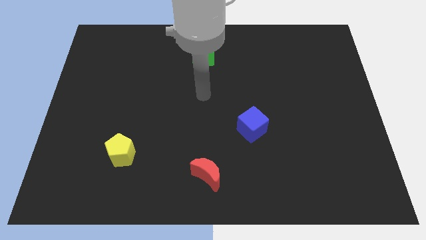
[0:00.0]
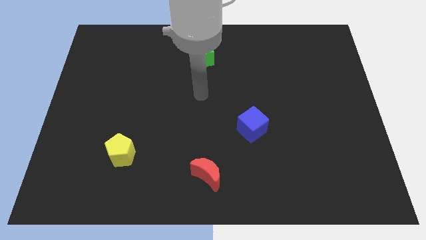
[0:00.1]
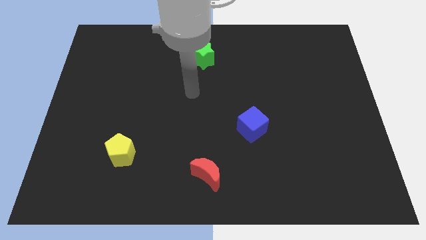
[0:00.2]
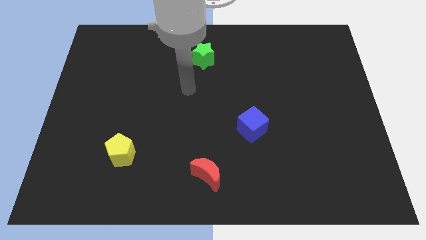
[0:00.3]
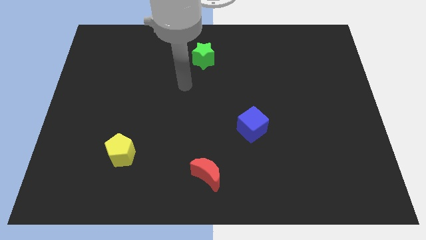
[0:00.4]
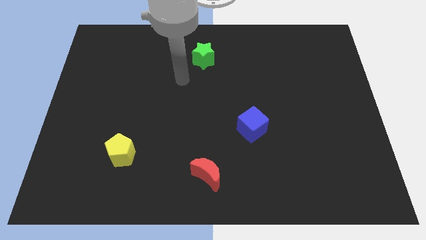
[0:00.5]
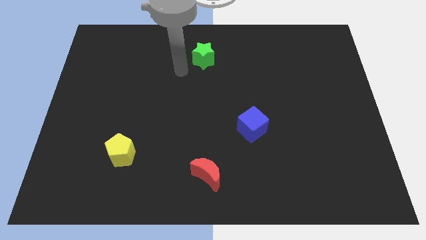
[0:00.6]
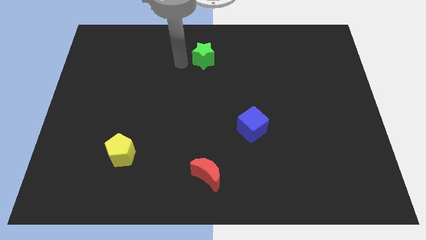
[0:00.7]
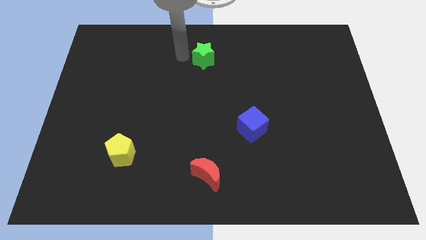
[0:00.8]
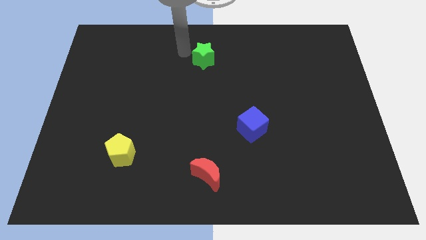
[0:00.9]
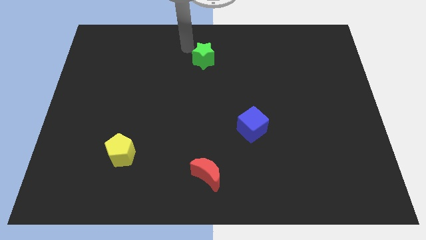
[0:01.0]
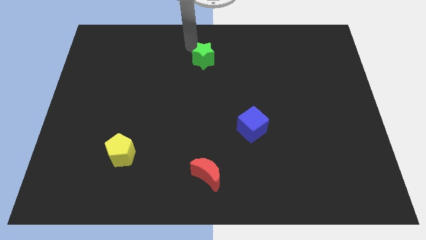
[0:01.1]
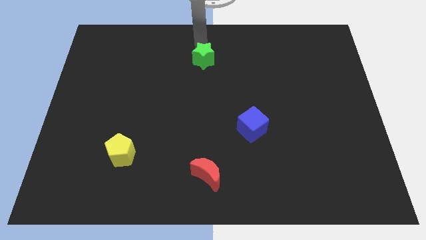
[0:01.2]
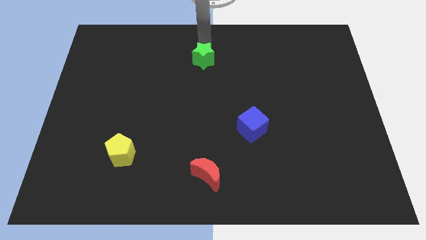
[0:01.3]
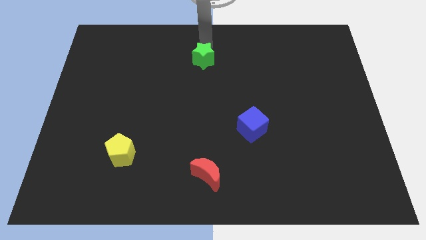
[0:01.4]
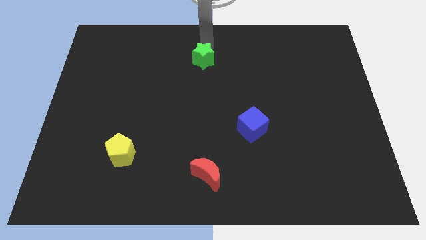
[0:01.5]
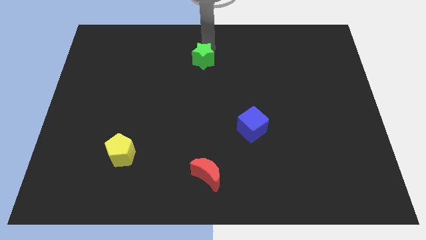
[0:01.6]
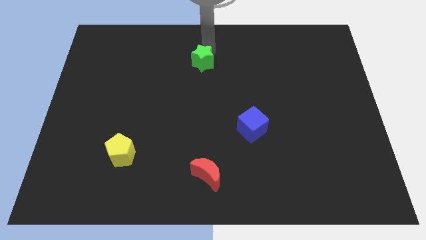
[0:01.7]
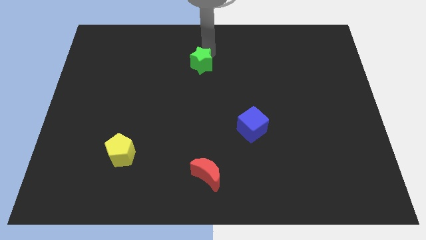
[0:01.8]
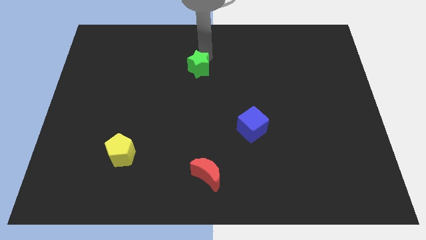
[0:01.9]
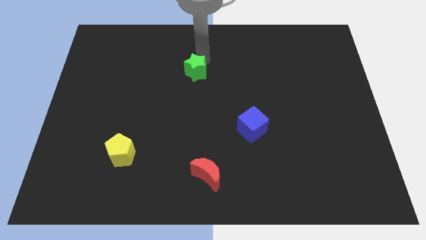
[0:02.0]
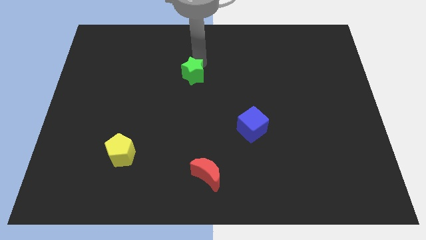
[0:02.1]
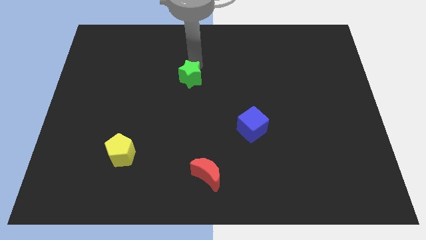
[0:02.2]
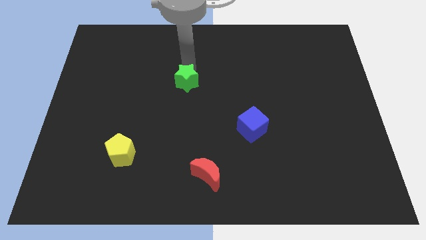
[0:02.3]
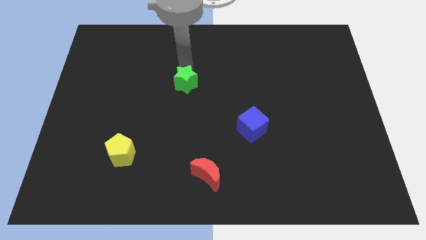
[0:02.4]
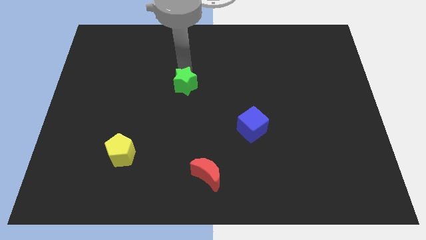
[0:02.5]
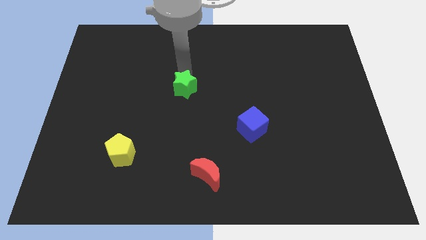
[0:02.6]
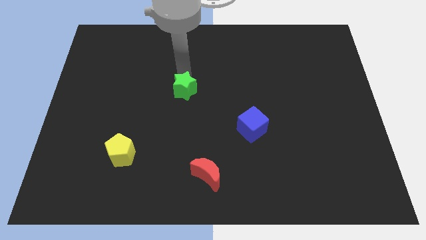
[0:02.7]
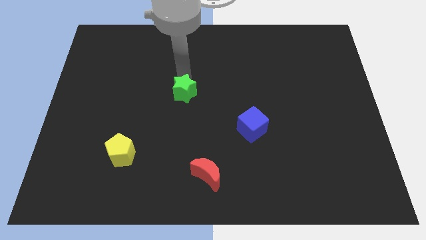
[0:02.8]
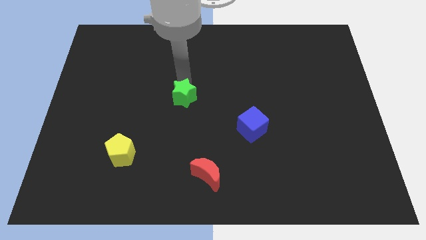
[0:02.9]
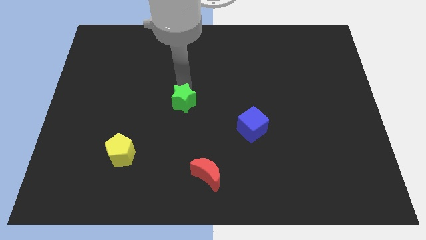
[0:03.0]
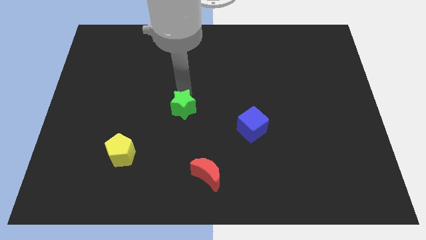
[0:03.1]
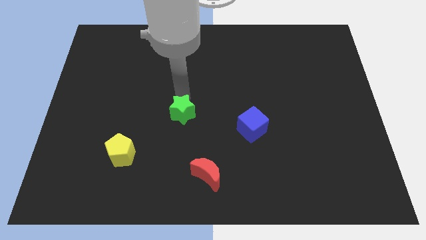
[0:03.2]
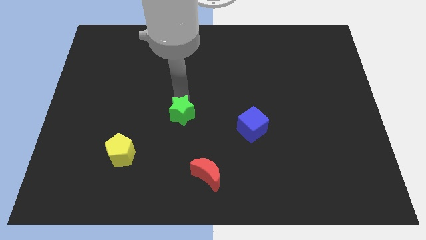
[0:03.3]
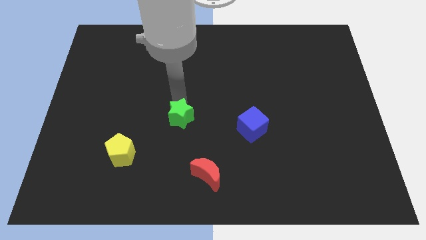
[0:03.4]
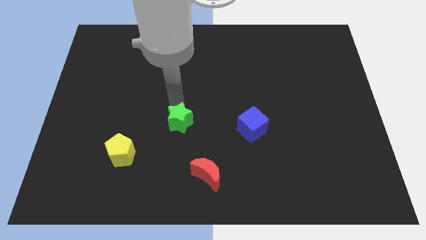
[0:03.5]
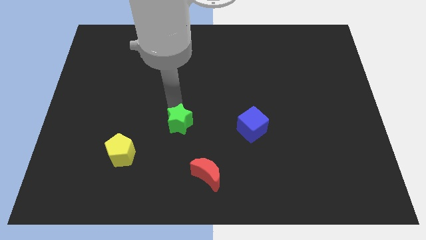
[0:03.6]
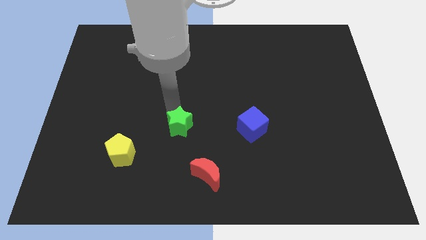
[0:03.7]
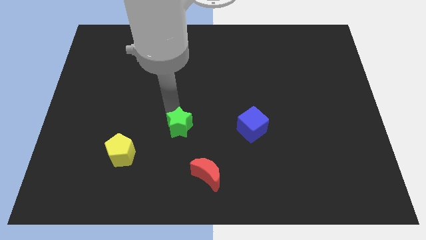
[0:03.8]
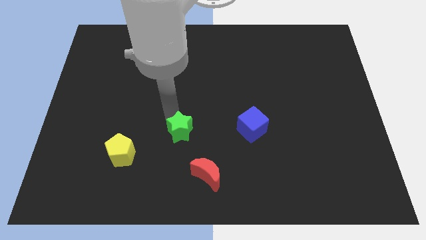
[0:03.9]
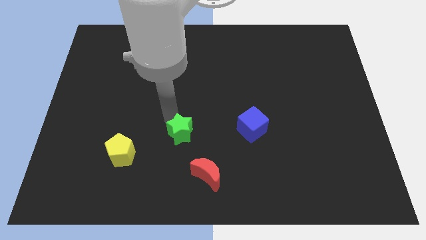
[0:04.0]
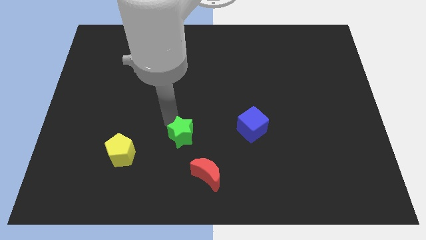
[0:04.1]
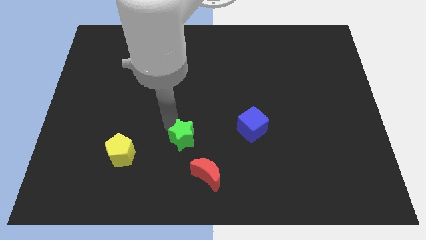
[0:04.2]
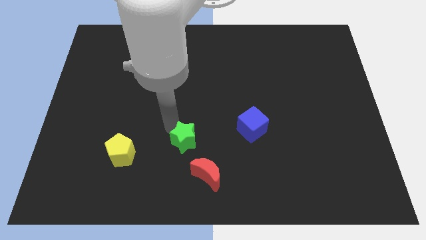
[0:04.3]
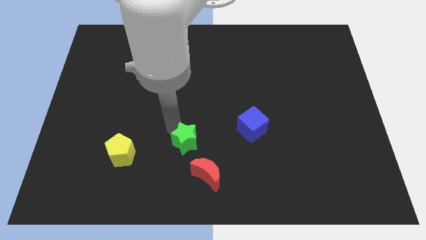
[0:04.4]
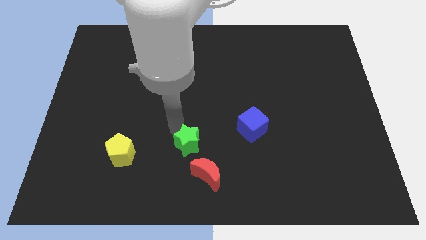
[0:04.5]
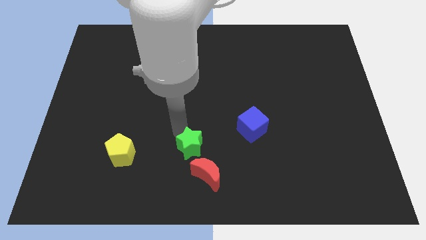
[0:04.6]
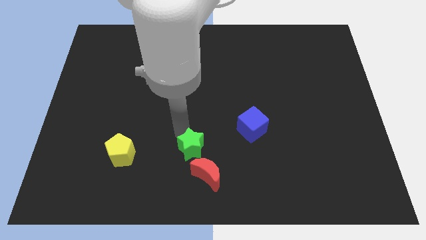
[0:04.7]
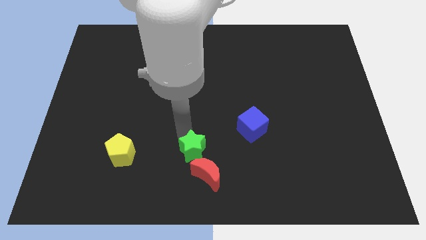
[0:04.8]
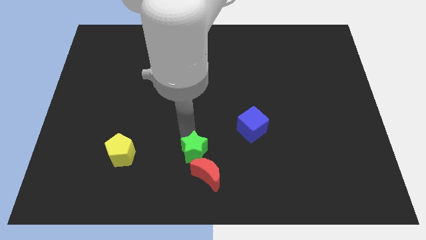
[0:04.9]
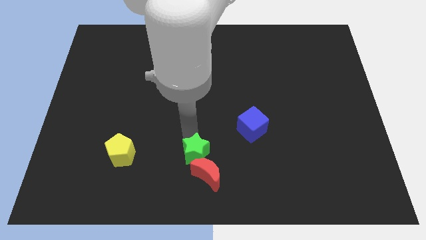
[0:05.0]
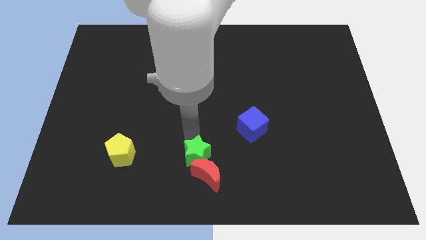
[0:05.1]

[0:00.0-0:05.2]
push the green block close to the moon

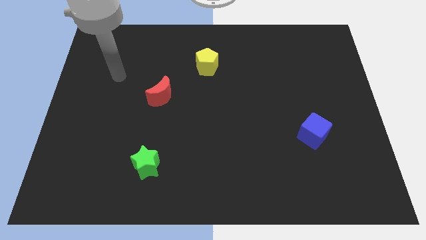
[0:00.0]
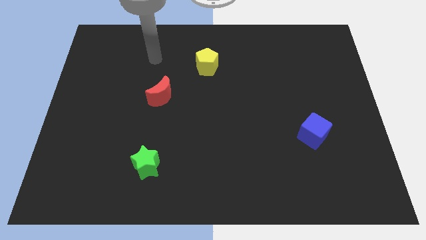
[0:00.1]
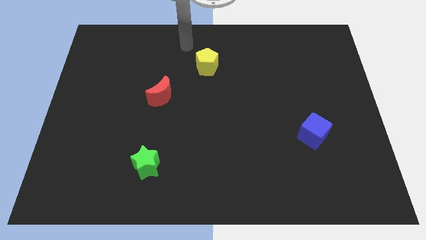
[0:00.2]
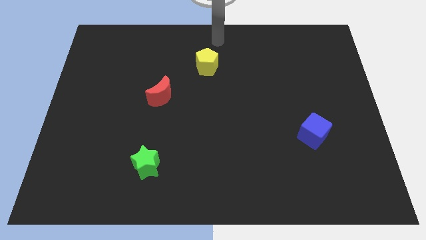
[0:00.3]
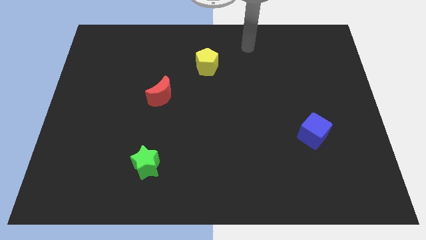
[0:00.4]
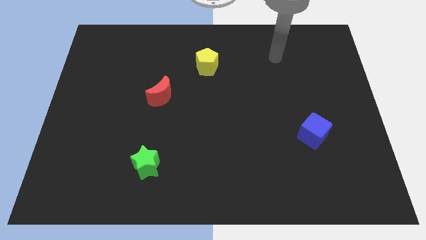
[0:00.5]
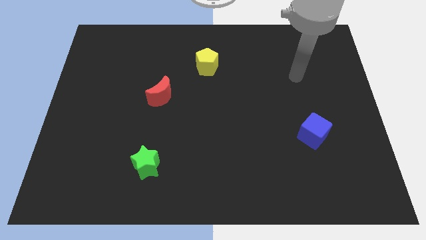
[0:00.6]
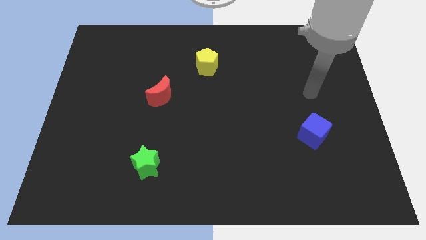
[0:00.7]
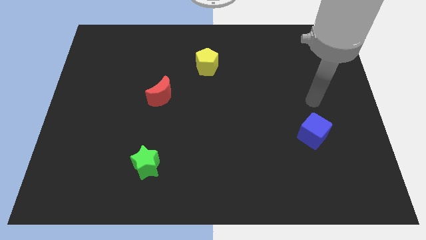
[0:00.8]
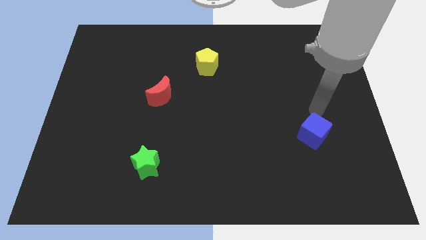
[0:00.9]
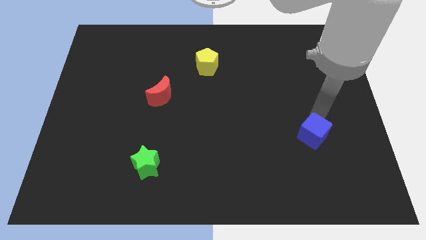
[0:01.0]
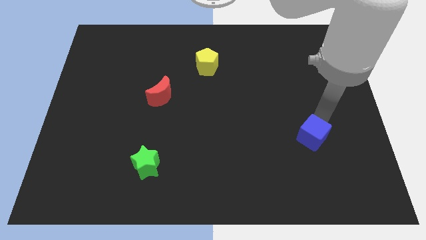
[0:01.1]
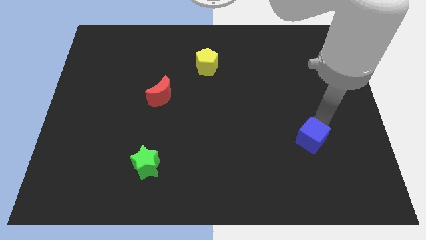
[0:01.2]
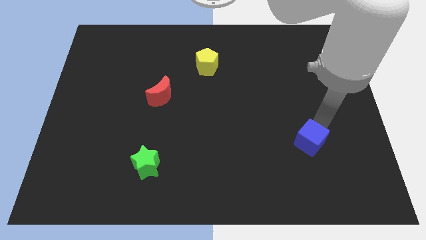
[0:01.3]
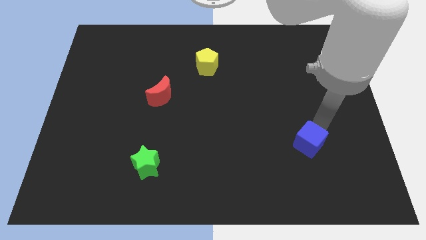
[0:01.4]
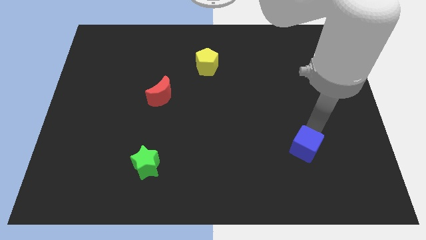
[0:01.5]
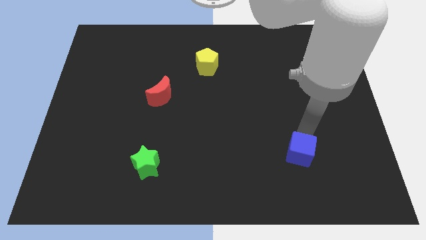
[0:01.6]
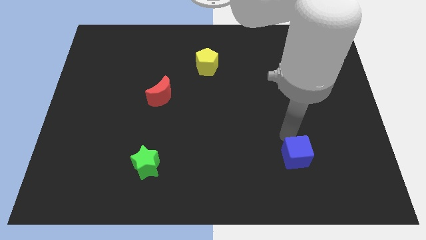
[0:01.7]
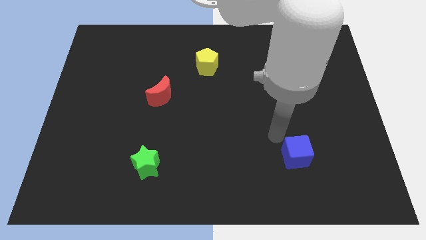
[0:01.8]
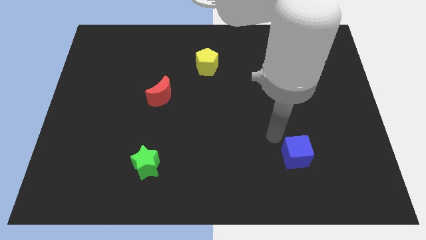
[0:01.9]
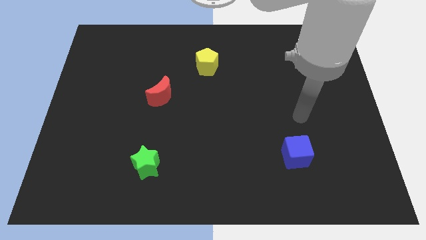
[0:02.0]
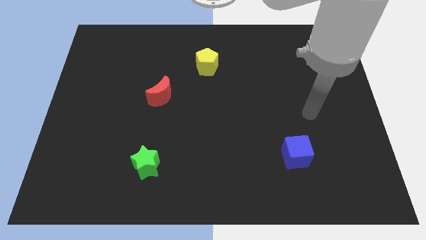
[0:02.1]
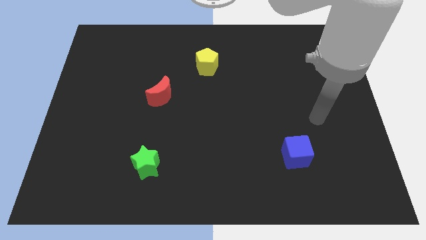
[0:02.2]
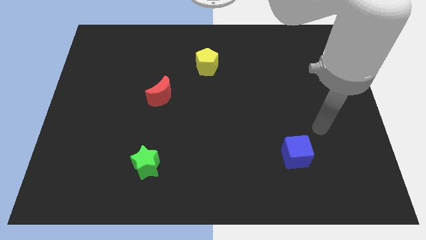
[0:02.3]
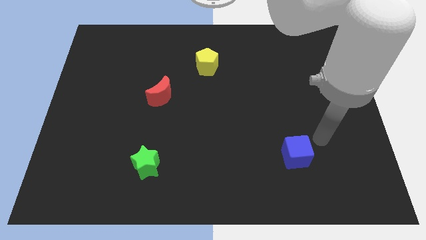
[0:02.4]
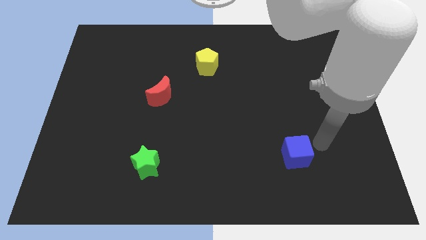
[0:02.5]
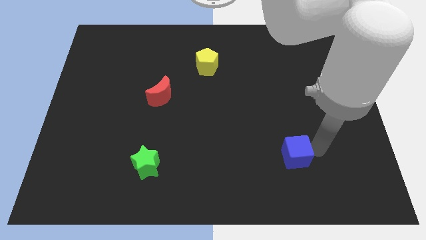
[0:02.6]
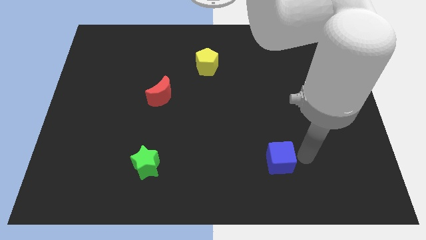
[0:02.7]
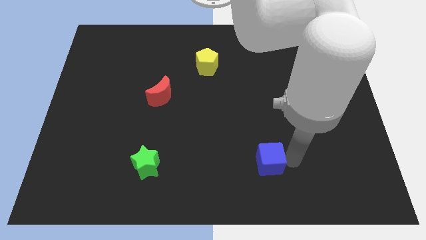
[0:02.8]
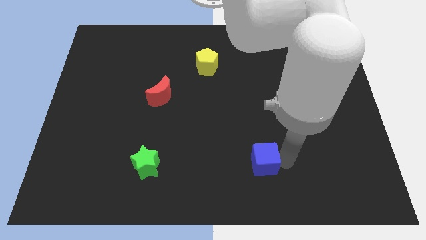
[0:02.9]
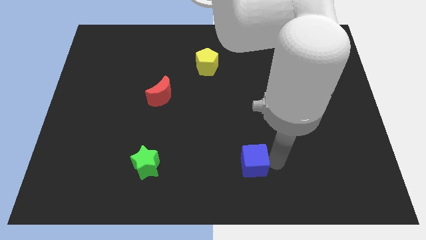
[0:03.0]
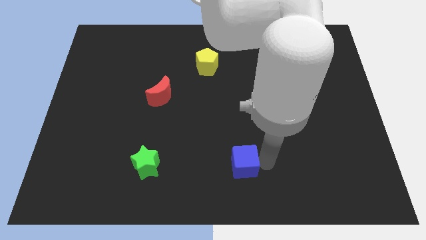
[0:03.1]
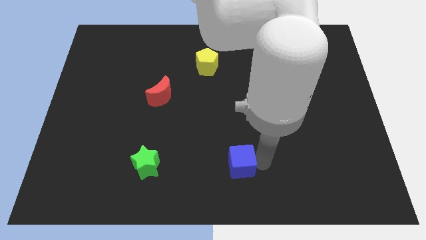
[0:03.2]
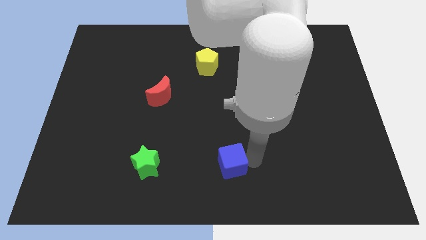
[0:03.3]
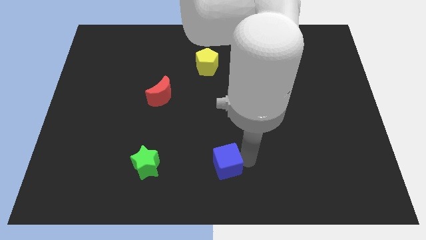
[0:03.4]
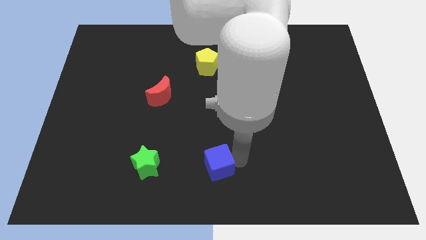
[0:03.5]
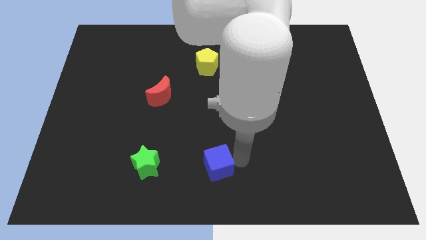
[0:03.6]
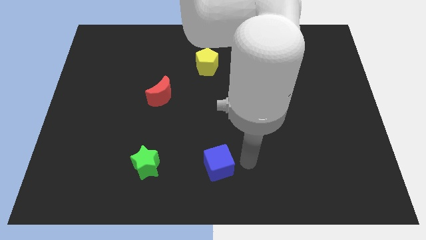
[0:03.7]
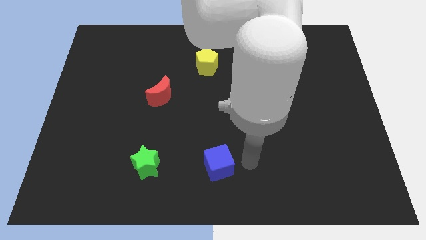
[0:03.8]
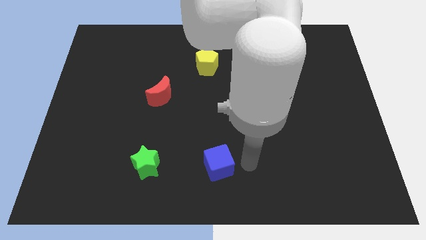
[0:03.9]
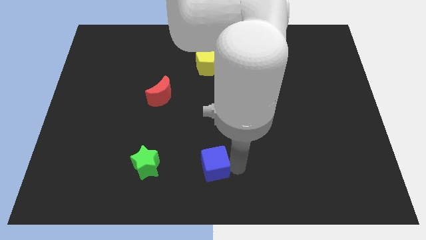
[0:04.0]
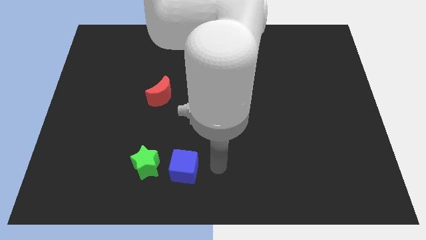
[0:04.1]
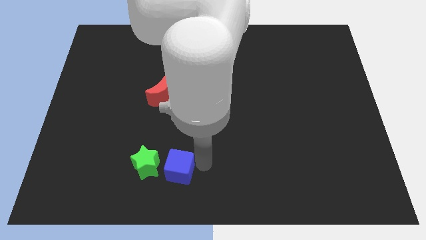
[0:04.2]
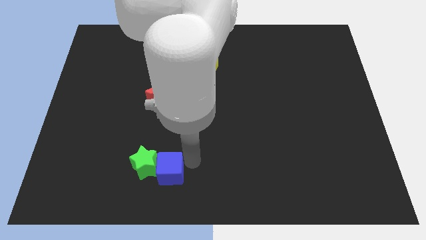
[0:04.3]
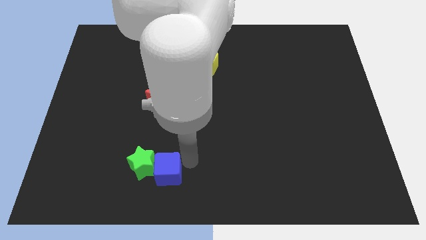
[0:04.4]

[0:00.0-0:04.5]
put the blue block to the green block
